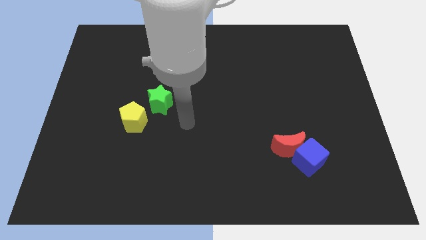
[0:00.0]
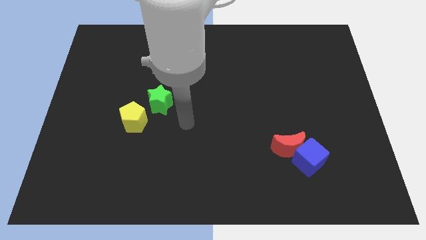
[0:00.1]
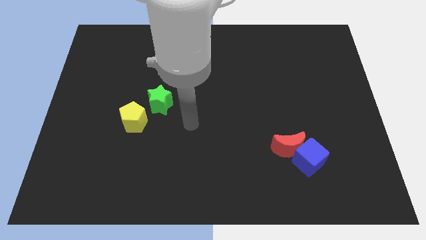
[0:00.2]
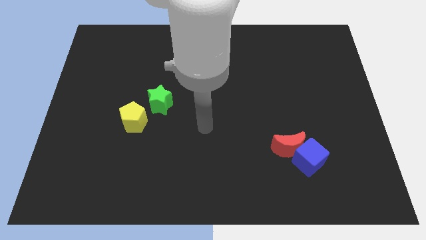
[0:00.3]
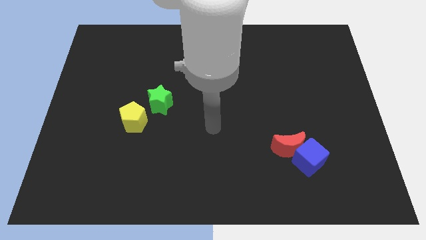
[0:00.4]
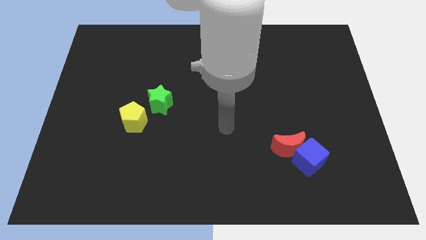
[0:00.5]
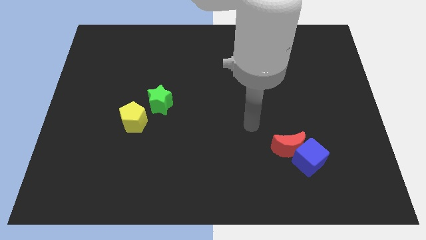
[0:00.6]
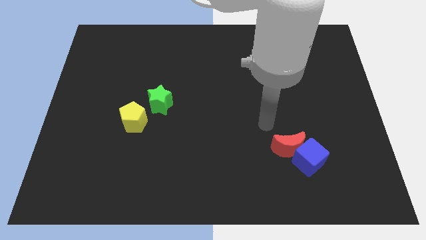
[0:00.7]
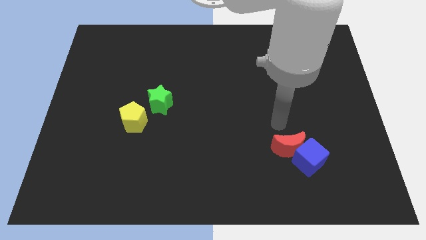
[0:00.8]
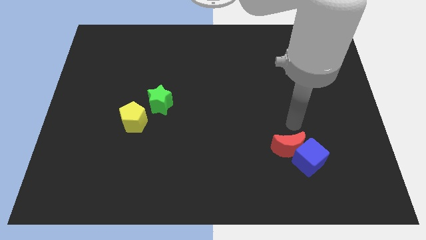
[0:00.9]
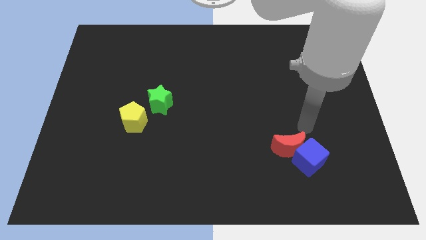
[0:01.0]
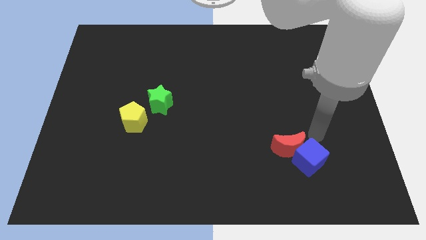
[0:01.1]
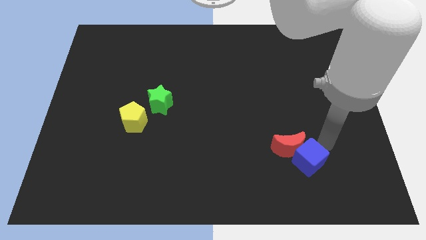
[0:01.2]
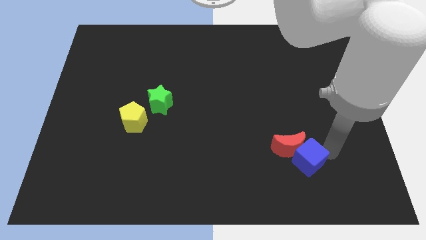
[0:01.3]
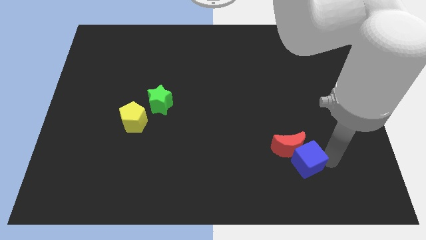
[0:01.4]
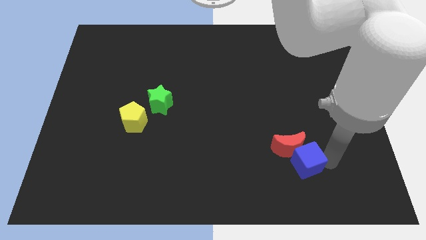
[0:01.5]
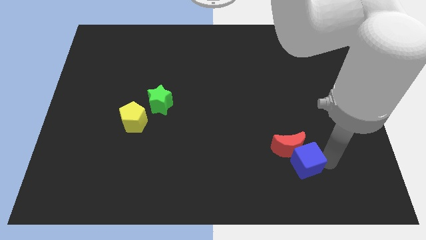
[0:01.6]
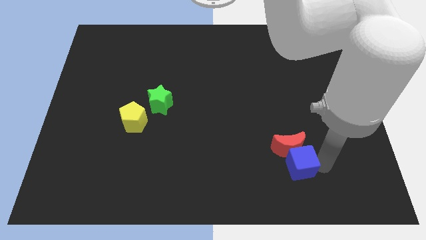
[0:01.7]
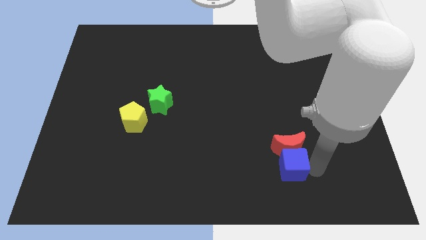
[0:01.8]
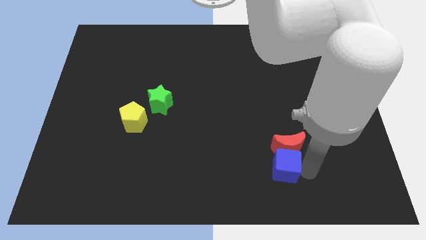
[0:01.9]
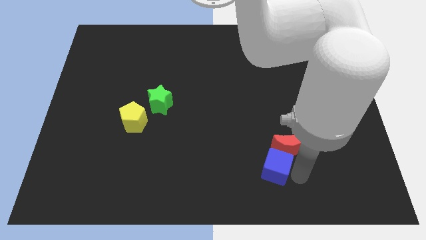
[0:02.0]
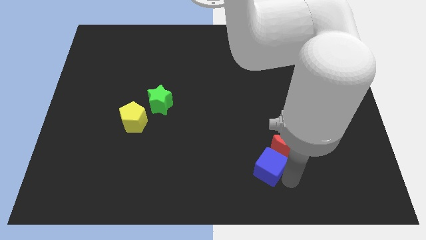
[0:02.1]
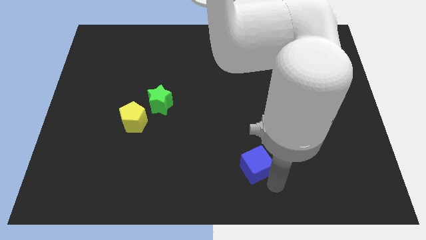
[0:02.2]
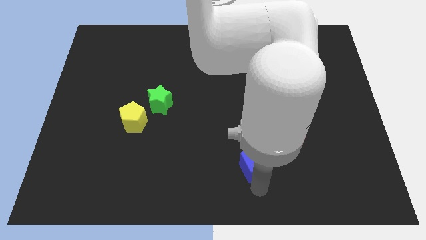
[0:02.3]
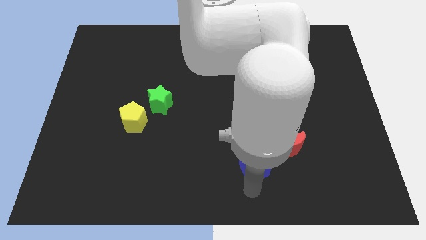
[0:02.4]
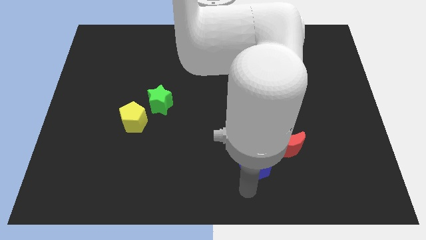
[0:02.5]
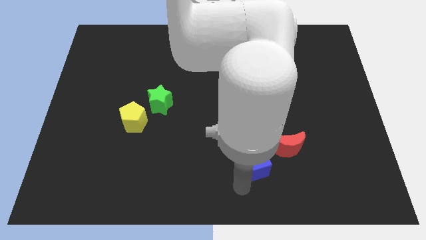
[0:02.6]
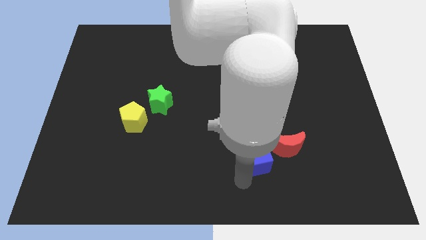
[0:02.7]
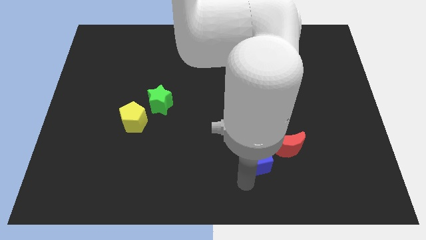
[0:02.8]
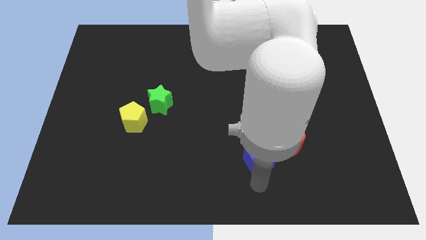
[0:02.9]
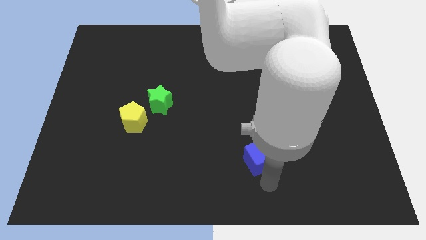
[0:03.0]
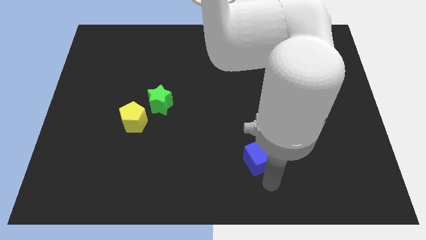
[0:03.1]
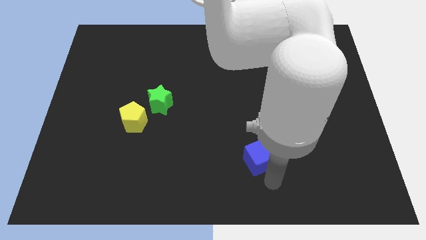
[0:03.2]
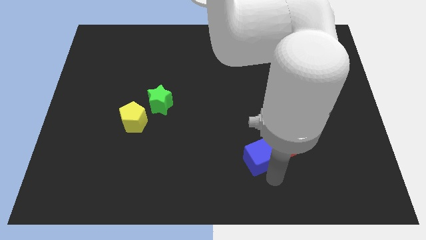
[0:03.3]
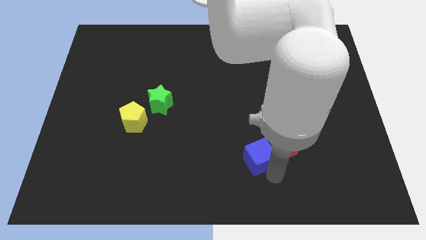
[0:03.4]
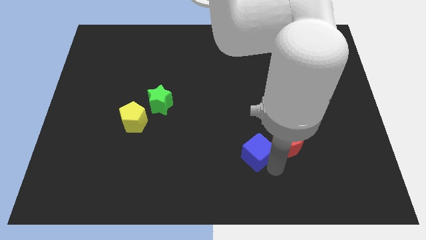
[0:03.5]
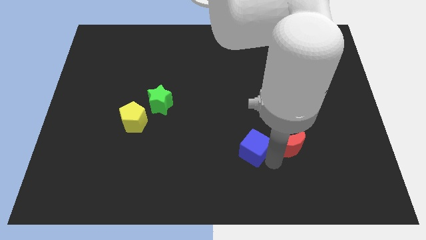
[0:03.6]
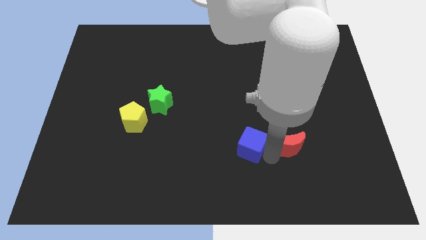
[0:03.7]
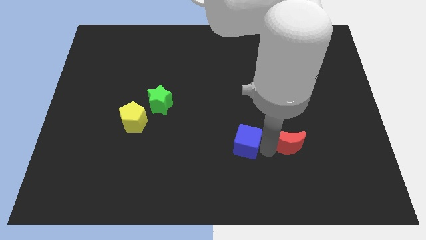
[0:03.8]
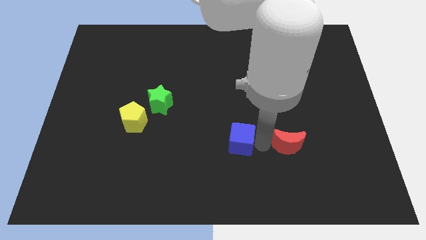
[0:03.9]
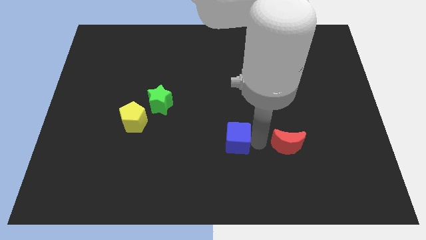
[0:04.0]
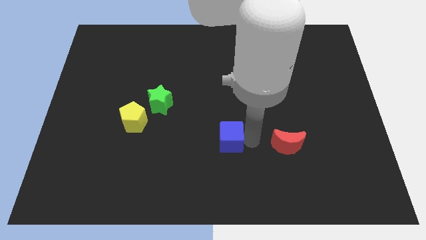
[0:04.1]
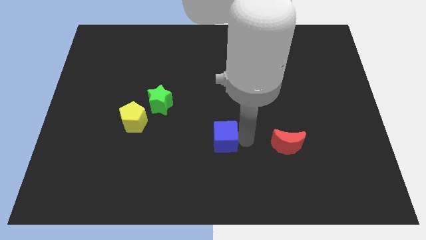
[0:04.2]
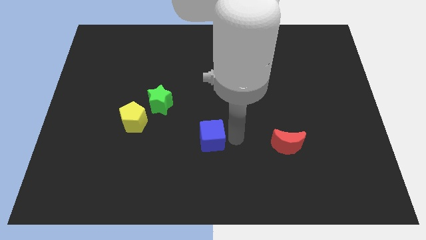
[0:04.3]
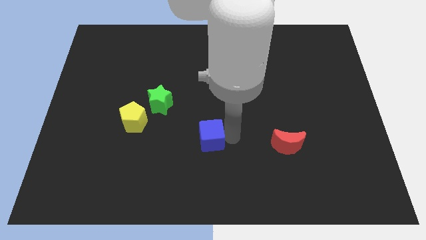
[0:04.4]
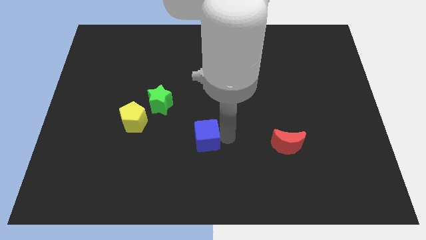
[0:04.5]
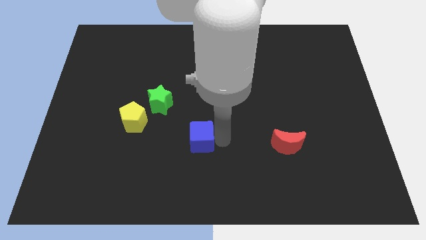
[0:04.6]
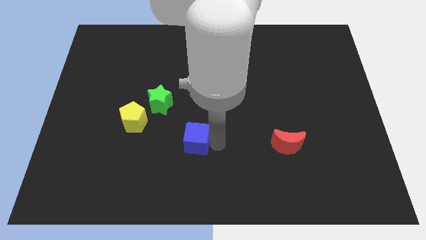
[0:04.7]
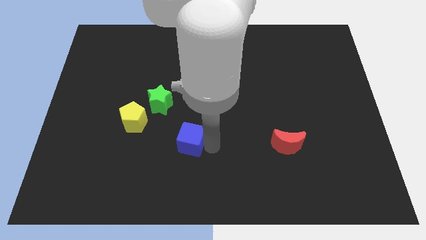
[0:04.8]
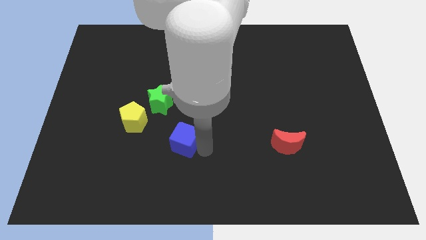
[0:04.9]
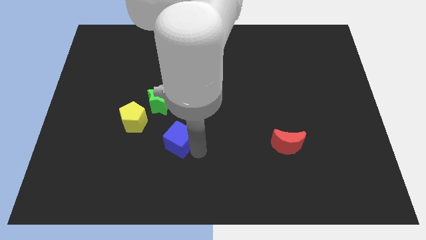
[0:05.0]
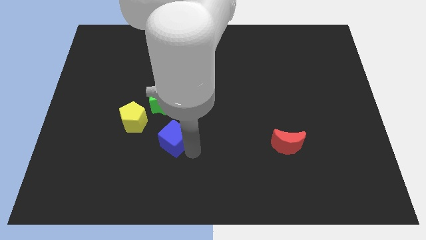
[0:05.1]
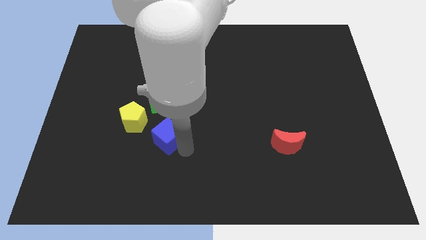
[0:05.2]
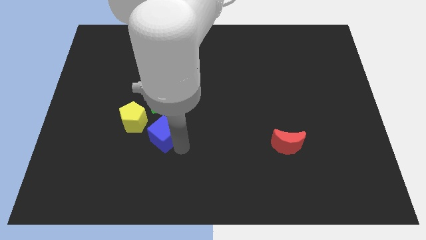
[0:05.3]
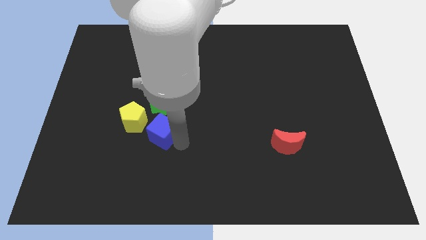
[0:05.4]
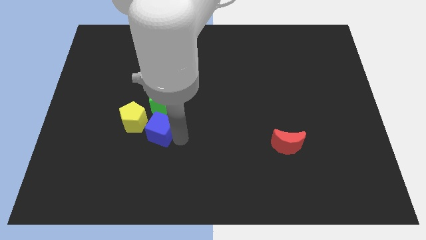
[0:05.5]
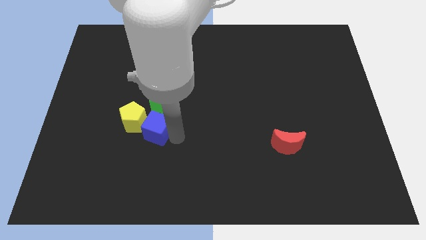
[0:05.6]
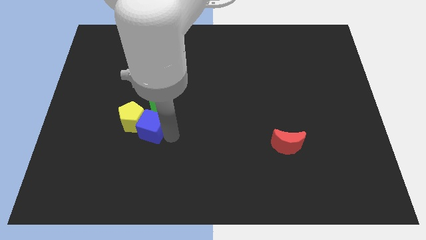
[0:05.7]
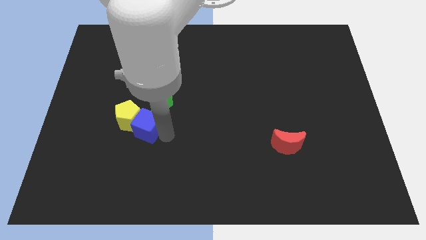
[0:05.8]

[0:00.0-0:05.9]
move the blue block close to the yellow block

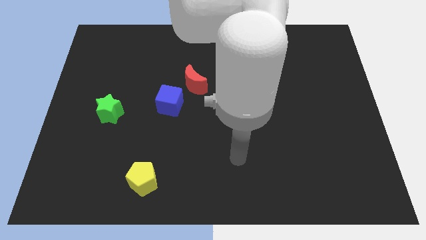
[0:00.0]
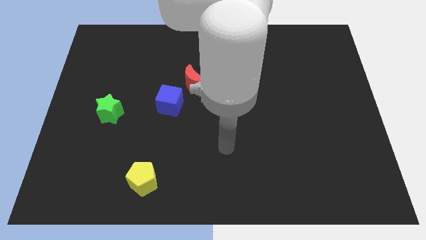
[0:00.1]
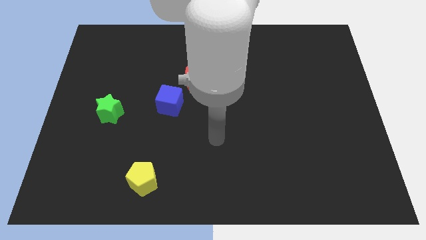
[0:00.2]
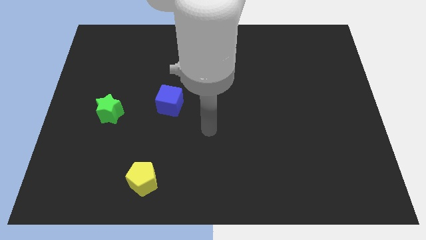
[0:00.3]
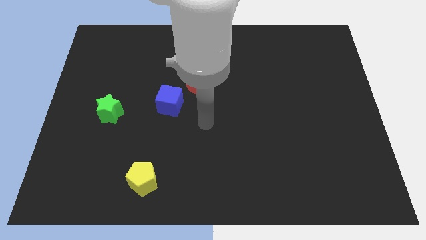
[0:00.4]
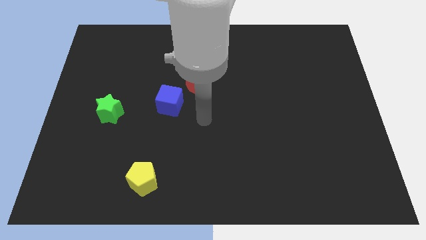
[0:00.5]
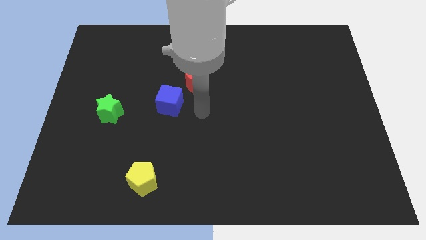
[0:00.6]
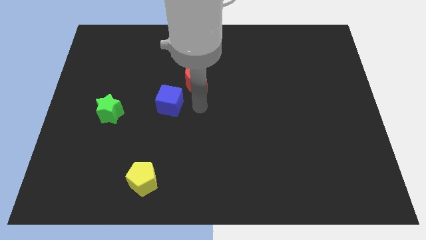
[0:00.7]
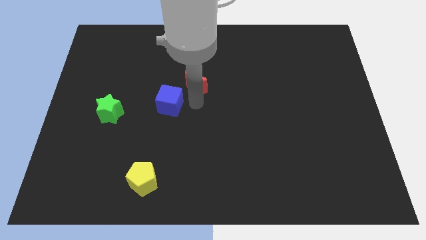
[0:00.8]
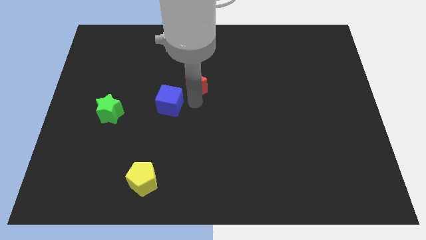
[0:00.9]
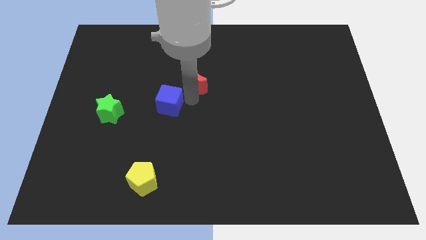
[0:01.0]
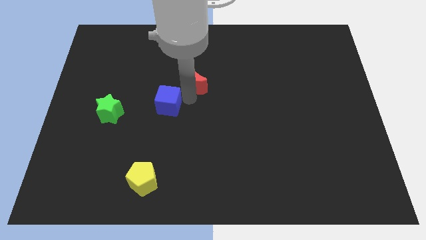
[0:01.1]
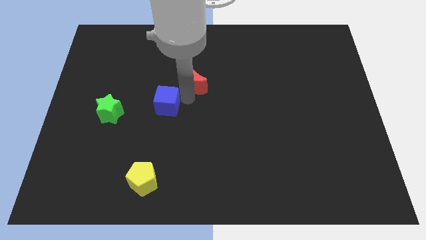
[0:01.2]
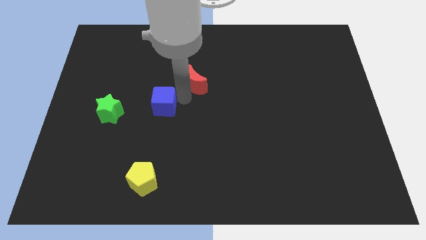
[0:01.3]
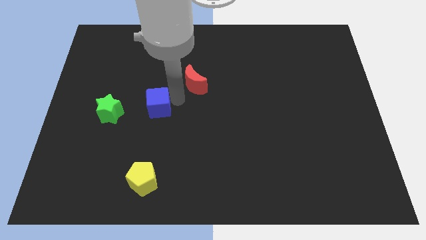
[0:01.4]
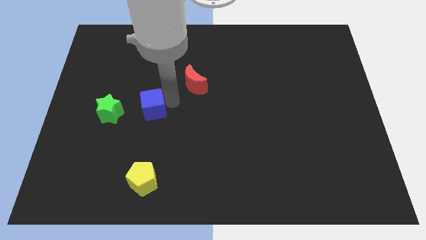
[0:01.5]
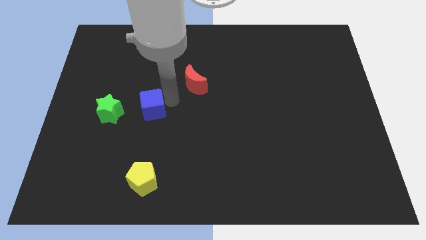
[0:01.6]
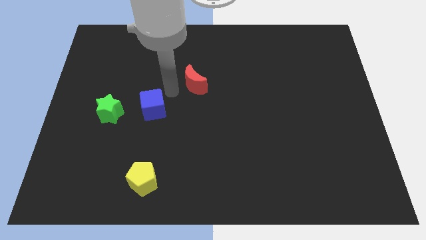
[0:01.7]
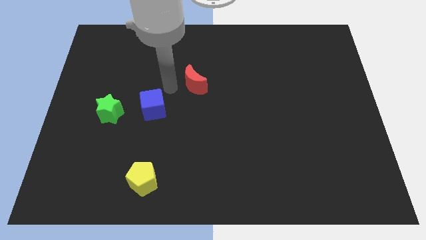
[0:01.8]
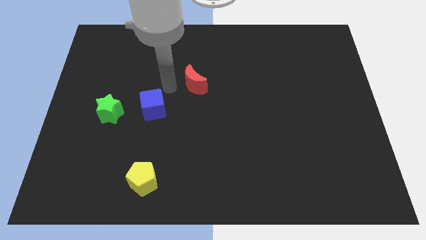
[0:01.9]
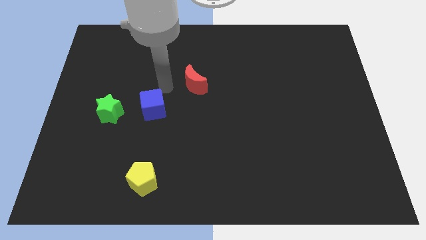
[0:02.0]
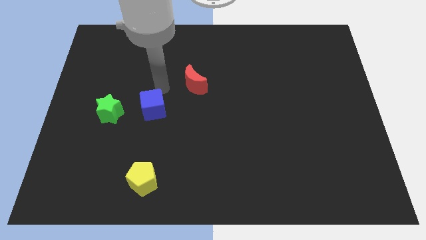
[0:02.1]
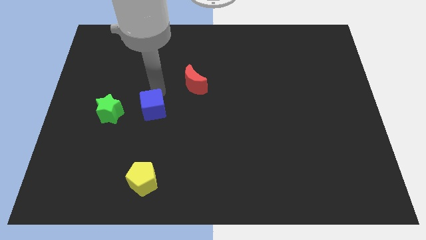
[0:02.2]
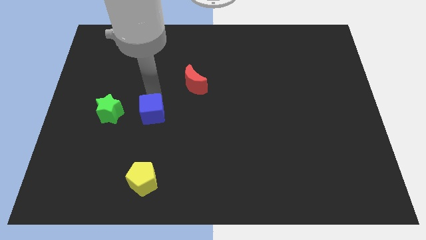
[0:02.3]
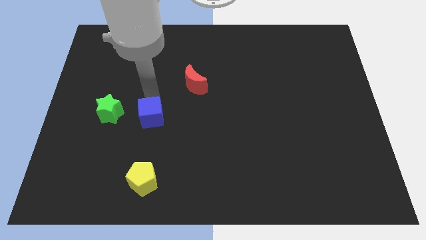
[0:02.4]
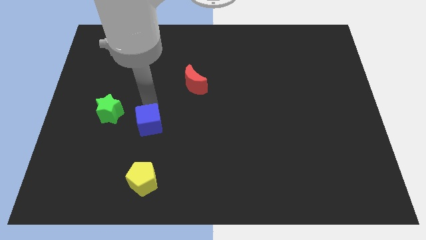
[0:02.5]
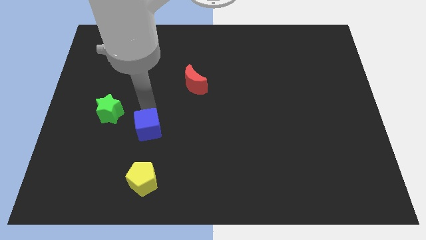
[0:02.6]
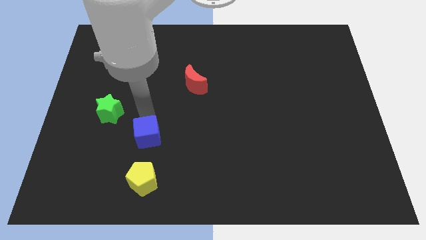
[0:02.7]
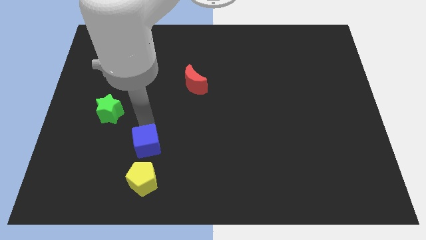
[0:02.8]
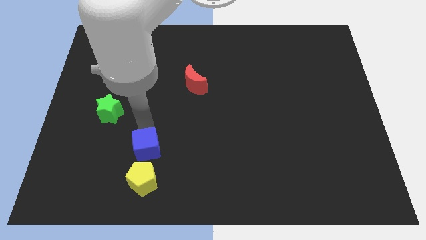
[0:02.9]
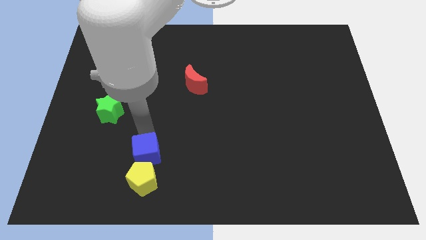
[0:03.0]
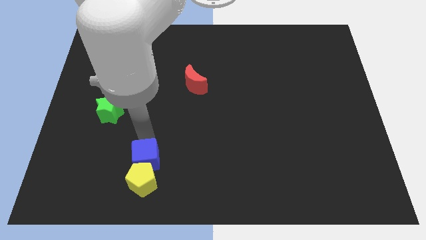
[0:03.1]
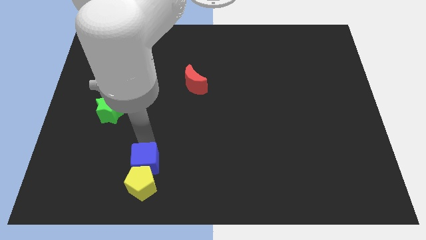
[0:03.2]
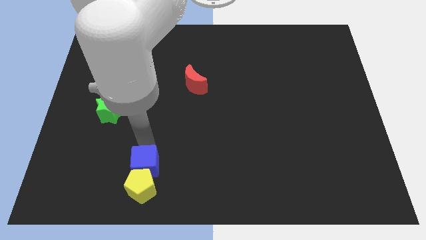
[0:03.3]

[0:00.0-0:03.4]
slide the blue cube to the yellow block
